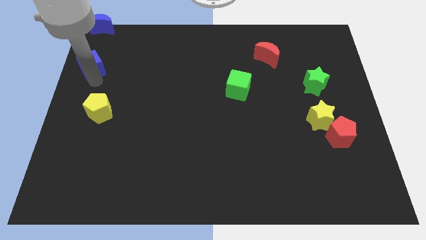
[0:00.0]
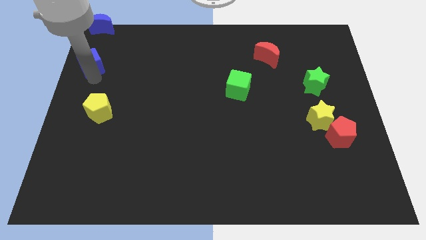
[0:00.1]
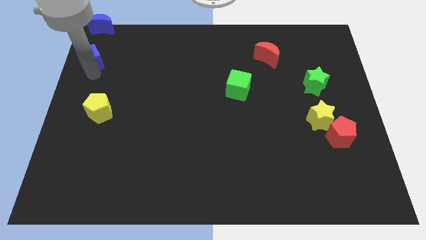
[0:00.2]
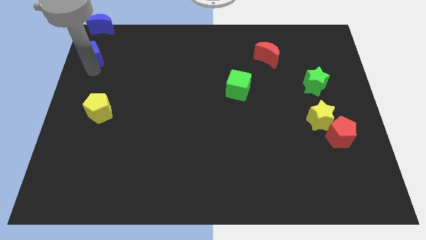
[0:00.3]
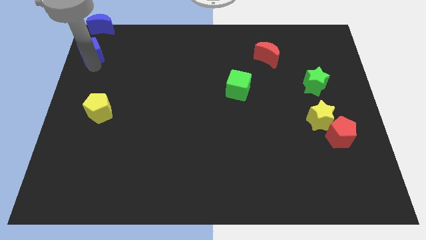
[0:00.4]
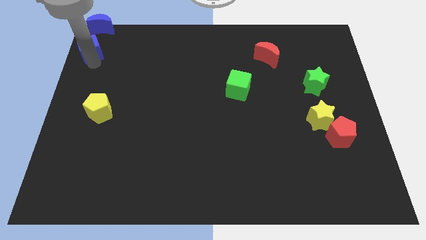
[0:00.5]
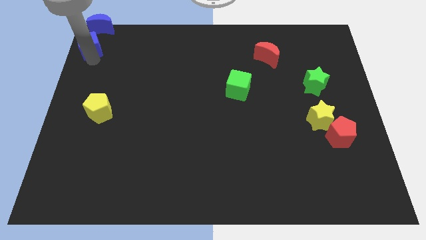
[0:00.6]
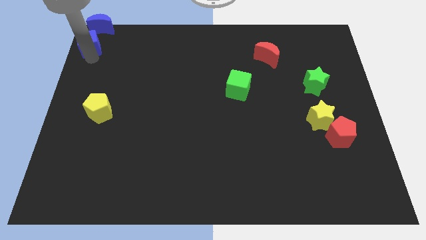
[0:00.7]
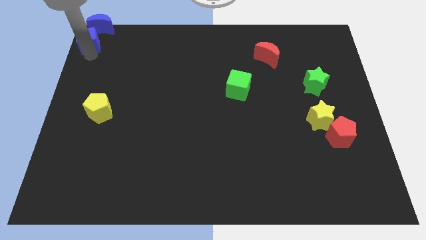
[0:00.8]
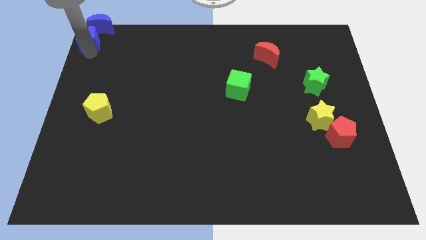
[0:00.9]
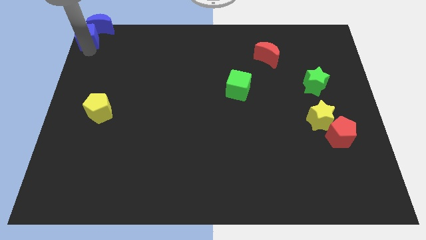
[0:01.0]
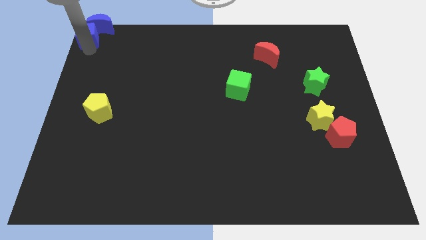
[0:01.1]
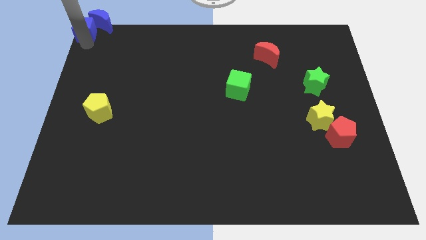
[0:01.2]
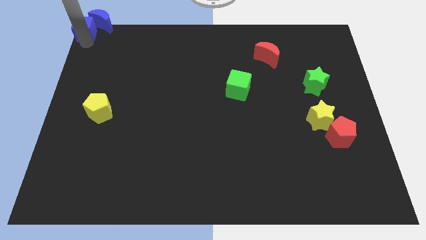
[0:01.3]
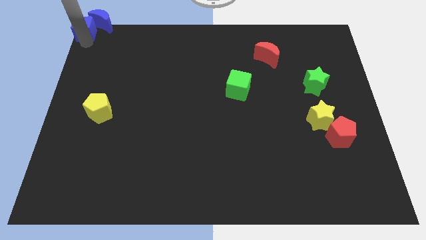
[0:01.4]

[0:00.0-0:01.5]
push the blue crescent to the top left of the board

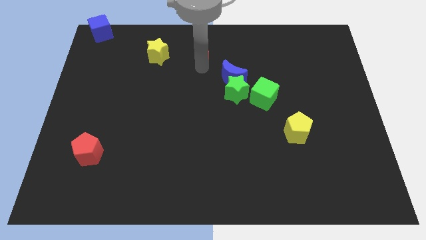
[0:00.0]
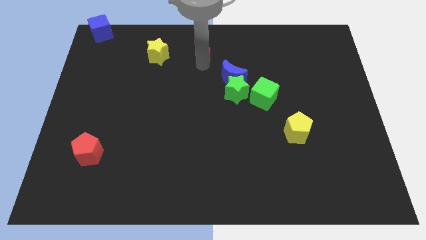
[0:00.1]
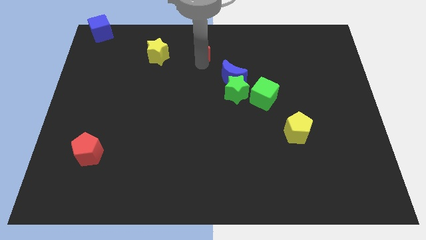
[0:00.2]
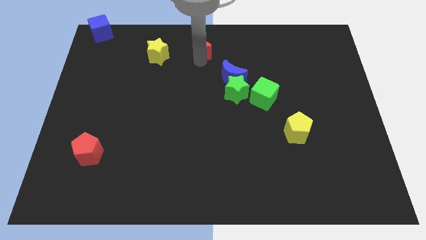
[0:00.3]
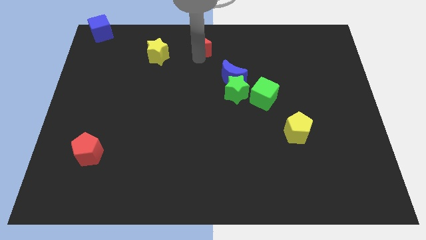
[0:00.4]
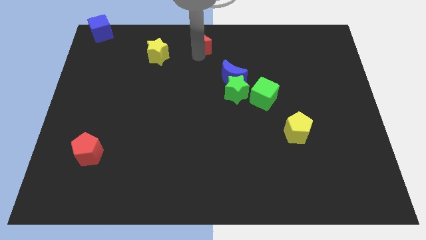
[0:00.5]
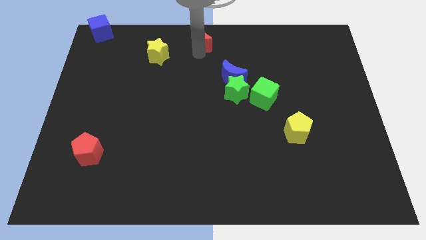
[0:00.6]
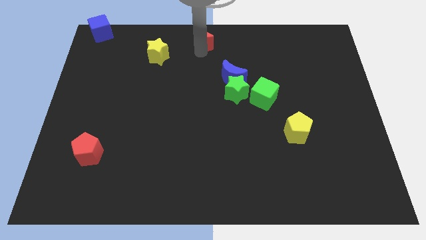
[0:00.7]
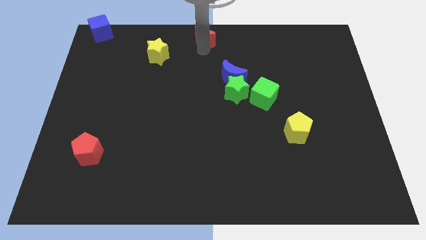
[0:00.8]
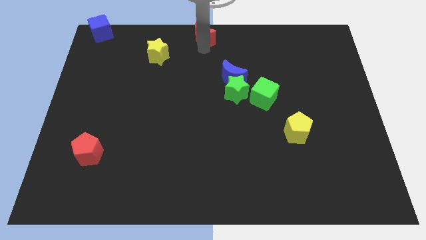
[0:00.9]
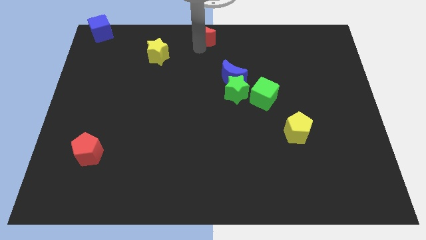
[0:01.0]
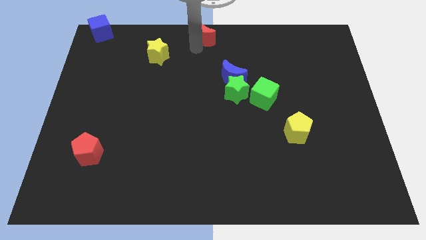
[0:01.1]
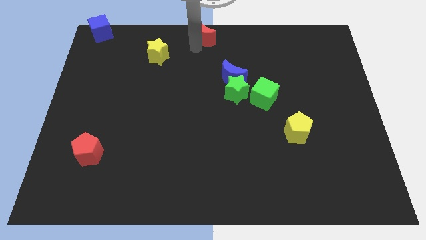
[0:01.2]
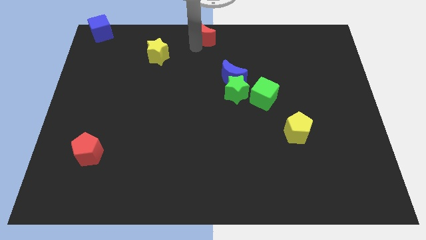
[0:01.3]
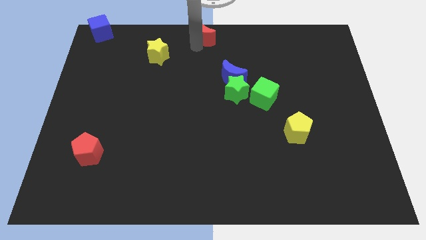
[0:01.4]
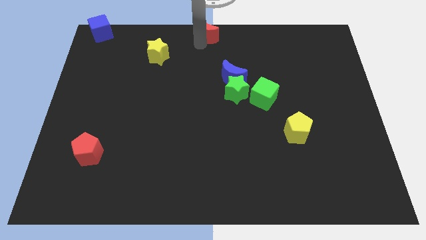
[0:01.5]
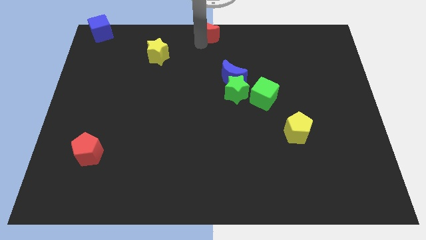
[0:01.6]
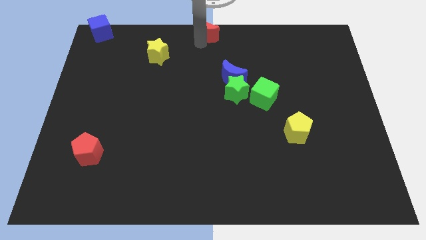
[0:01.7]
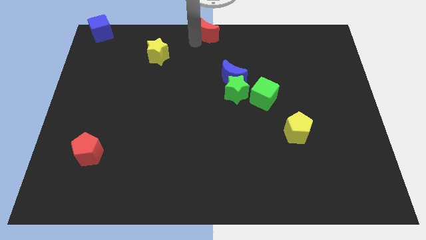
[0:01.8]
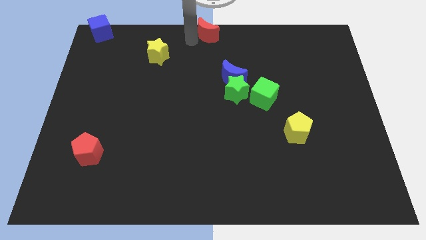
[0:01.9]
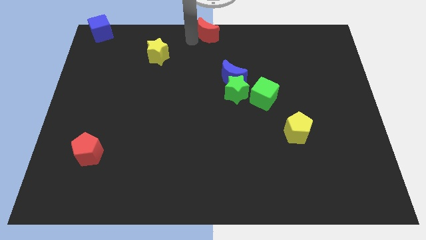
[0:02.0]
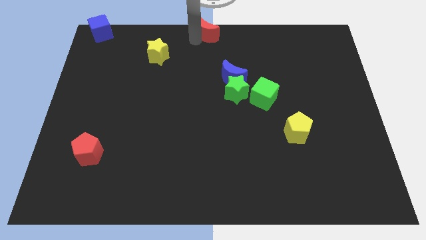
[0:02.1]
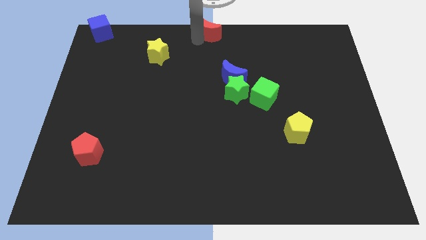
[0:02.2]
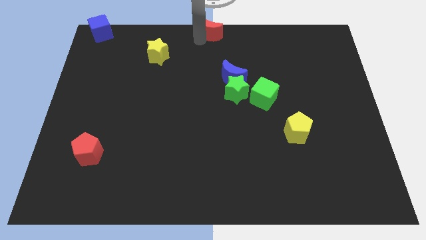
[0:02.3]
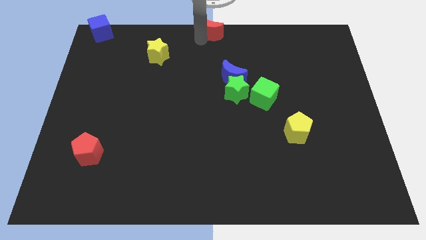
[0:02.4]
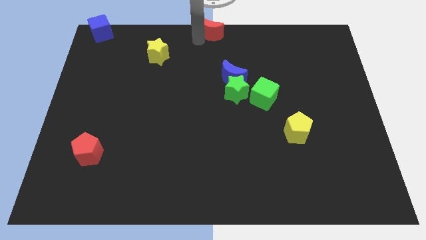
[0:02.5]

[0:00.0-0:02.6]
push the red moon to the top center

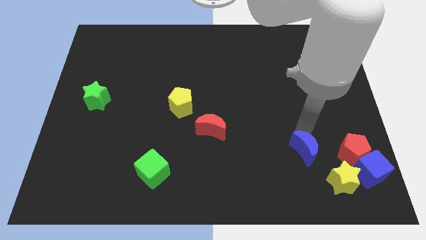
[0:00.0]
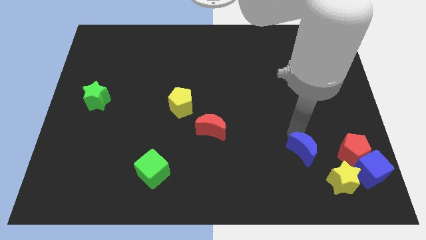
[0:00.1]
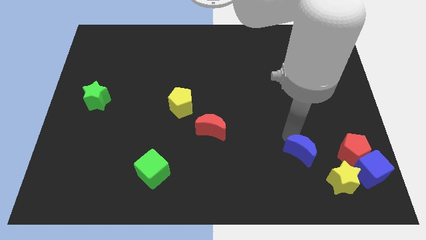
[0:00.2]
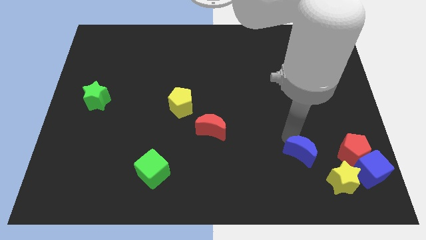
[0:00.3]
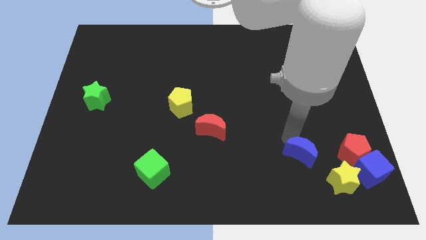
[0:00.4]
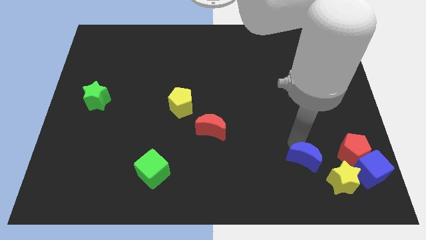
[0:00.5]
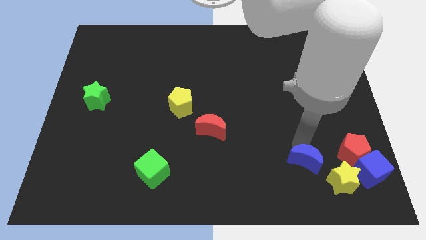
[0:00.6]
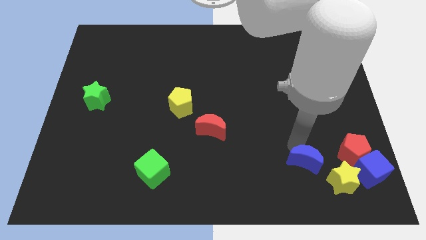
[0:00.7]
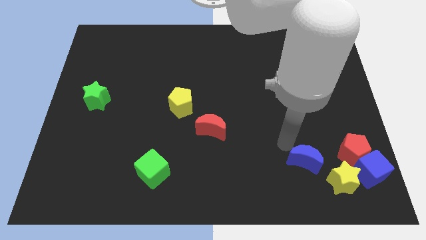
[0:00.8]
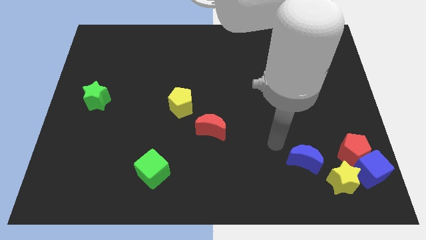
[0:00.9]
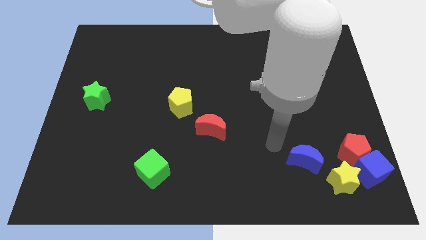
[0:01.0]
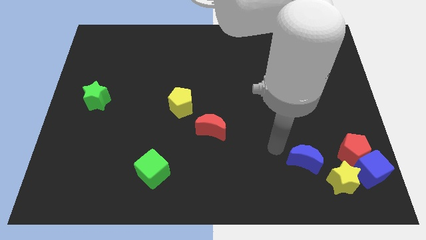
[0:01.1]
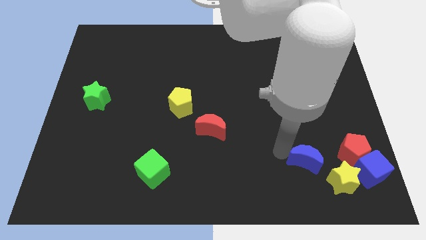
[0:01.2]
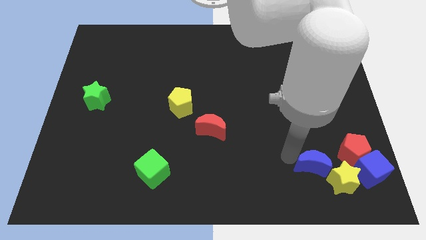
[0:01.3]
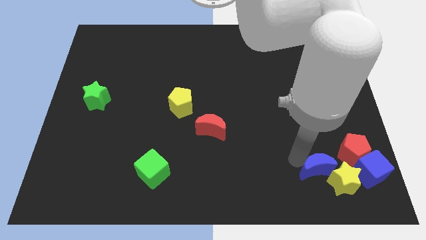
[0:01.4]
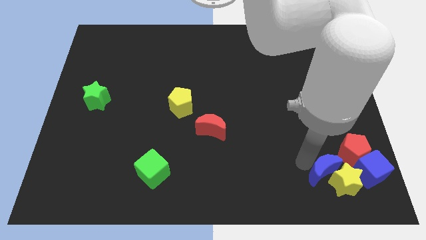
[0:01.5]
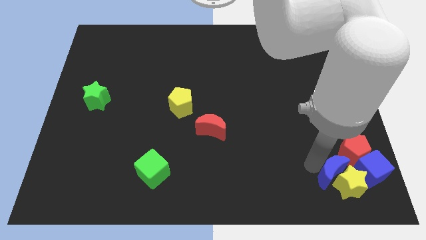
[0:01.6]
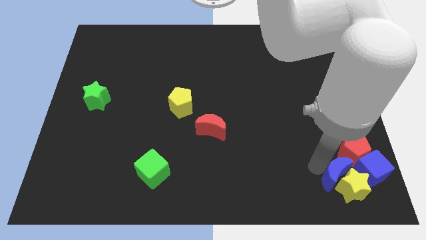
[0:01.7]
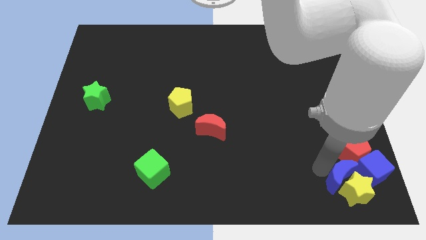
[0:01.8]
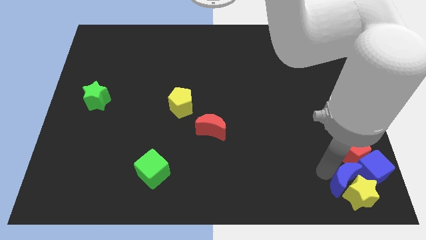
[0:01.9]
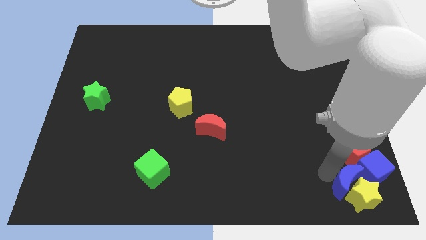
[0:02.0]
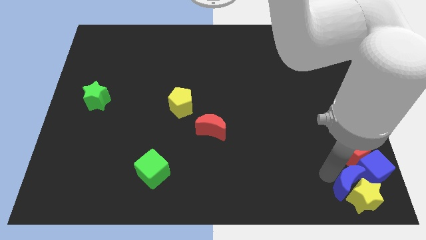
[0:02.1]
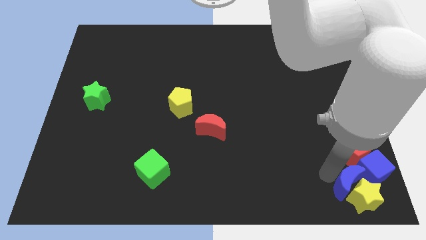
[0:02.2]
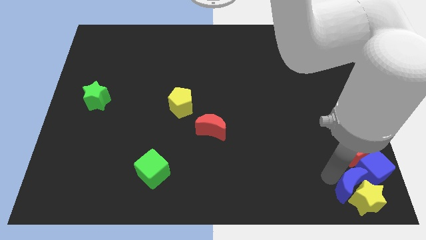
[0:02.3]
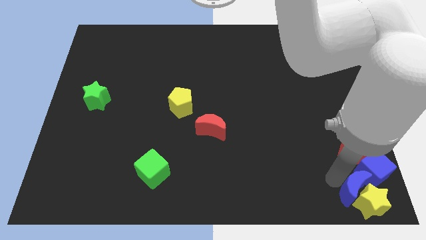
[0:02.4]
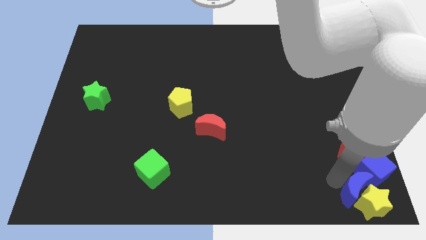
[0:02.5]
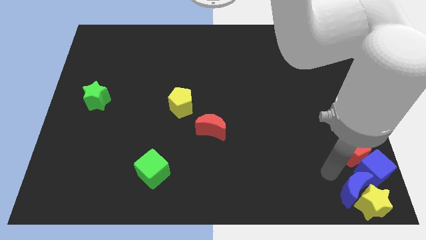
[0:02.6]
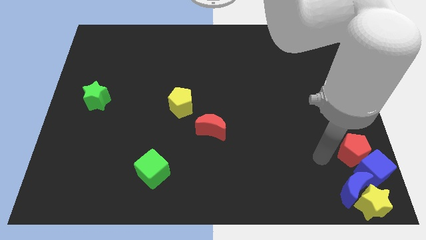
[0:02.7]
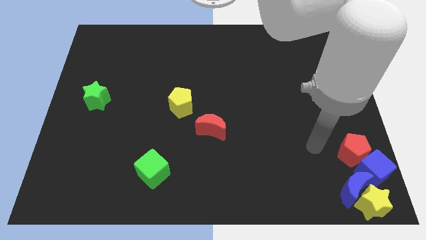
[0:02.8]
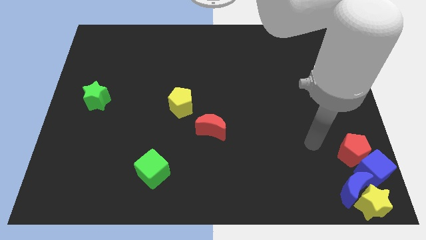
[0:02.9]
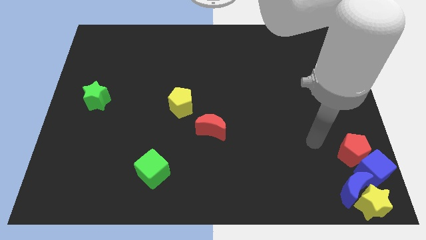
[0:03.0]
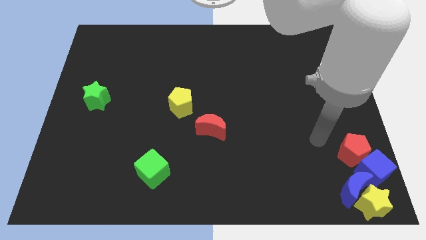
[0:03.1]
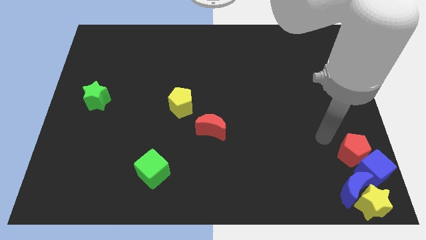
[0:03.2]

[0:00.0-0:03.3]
move the yellow star to the bottom right corner with the blue moon

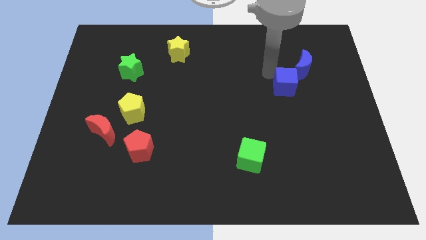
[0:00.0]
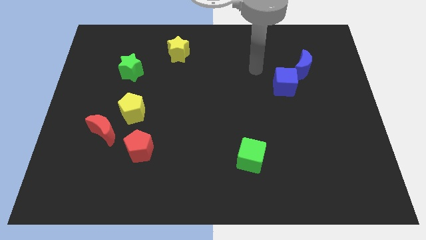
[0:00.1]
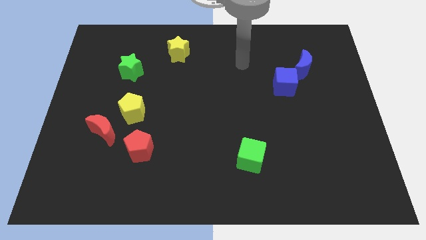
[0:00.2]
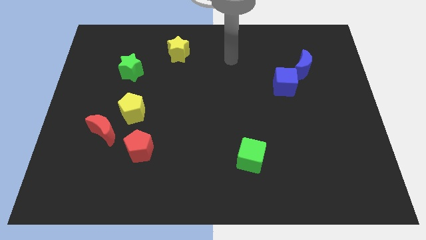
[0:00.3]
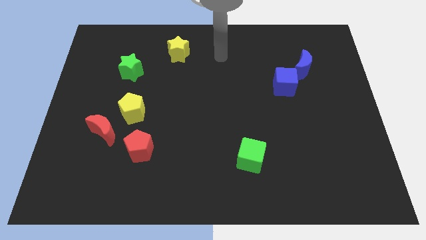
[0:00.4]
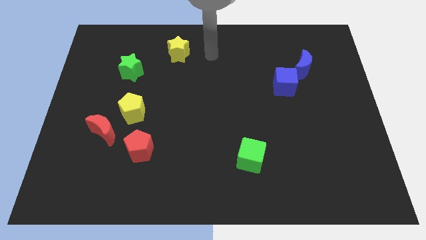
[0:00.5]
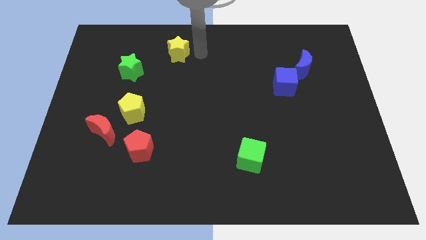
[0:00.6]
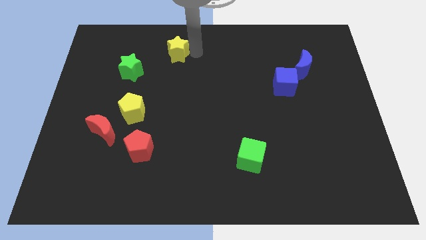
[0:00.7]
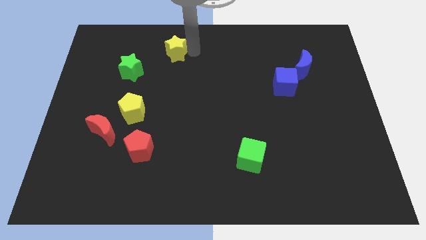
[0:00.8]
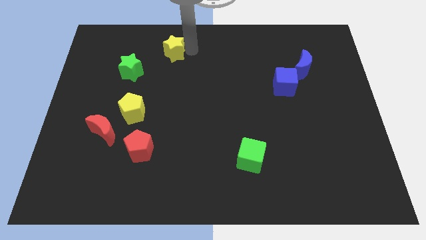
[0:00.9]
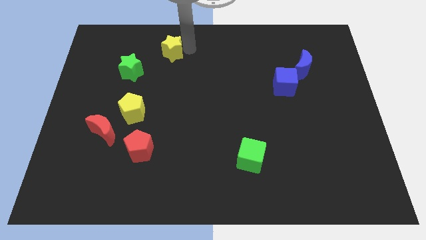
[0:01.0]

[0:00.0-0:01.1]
place the arm near the yellow star

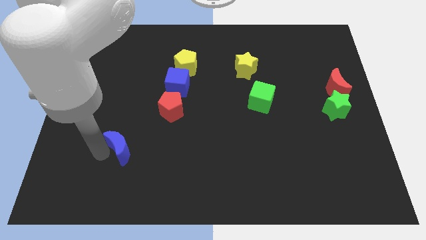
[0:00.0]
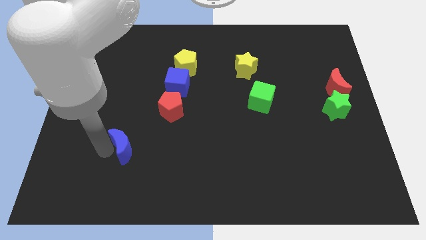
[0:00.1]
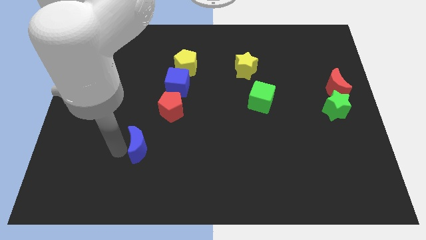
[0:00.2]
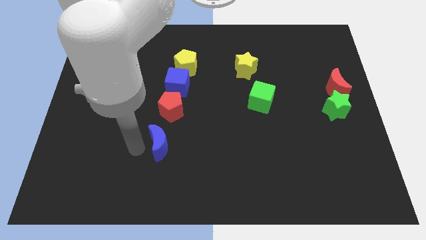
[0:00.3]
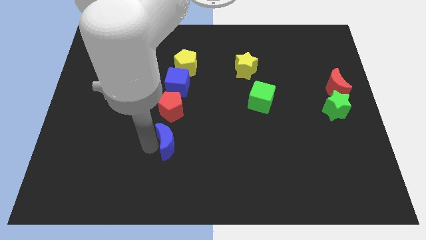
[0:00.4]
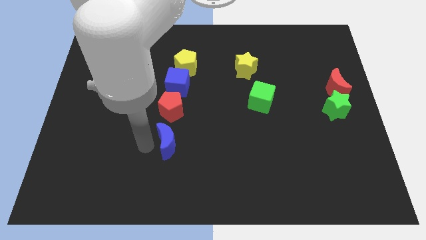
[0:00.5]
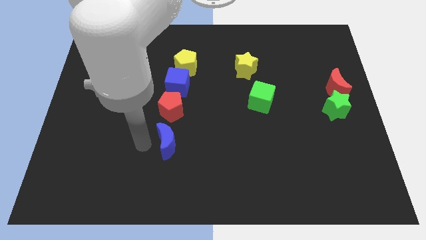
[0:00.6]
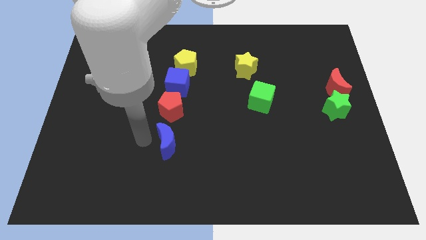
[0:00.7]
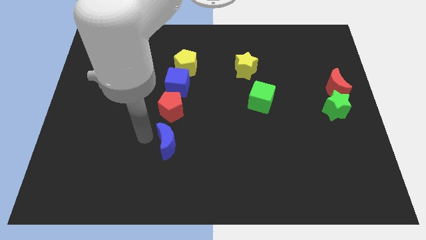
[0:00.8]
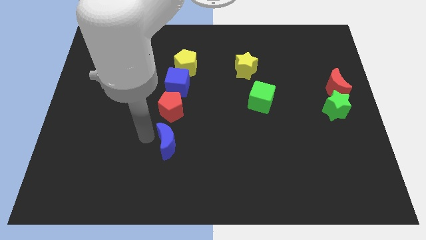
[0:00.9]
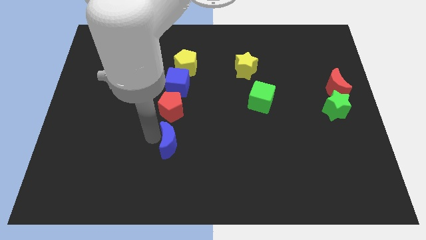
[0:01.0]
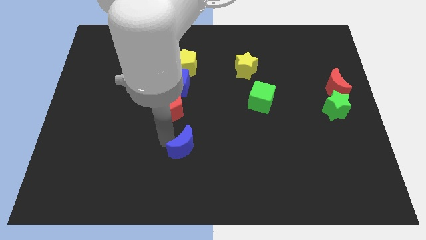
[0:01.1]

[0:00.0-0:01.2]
place the blue crescent below the red pentagon
